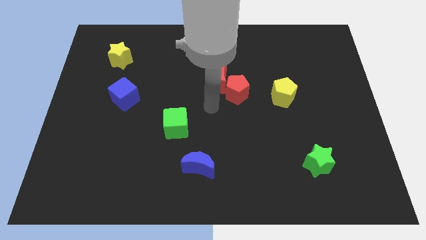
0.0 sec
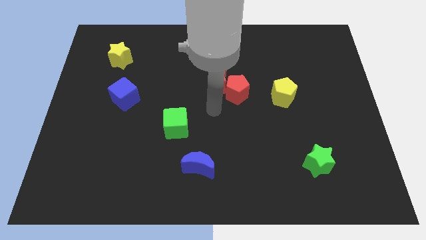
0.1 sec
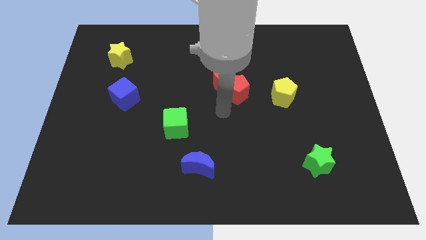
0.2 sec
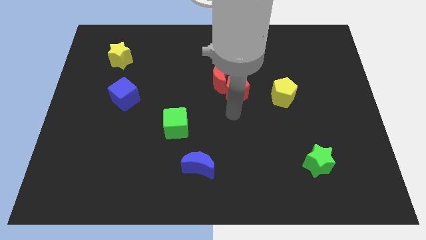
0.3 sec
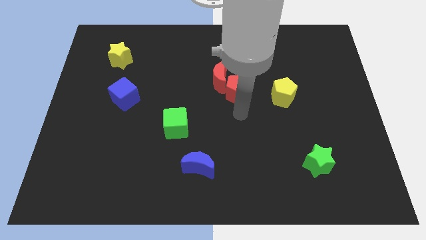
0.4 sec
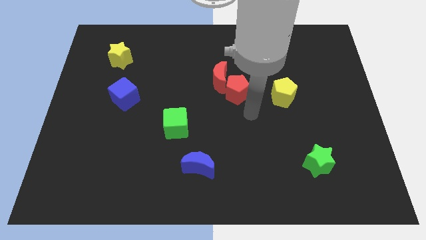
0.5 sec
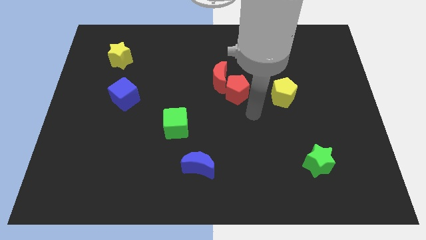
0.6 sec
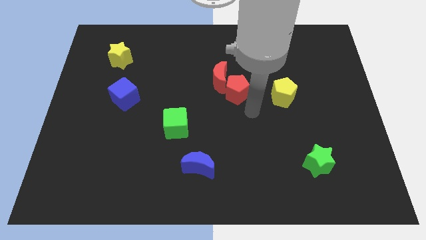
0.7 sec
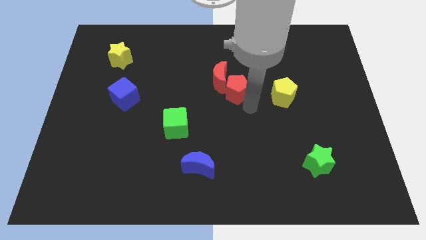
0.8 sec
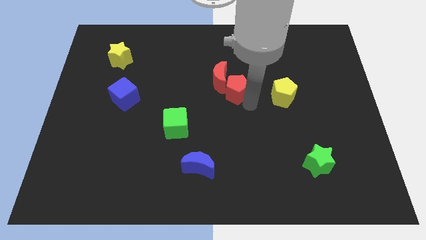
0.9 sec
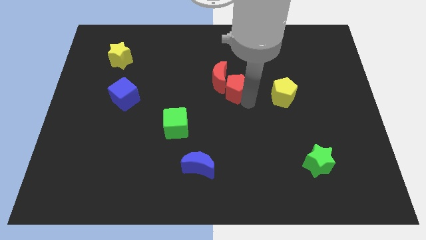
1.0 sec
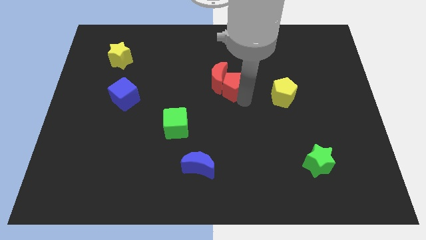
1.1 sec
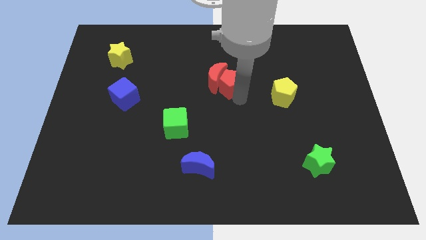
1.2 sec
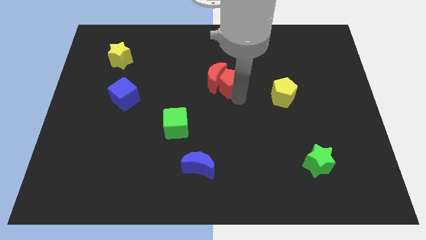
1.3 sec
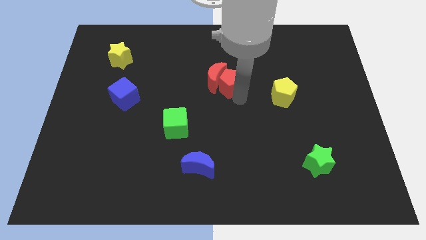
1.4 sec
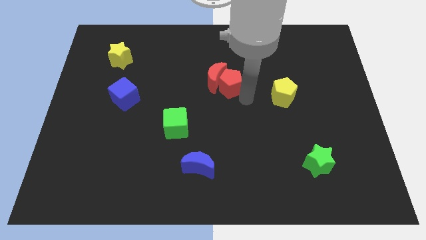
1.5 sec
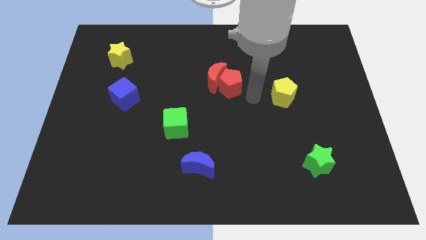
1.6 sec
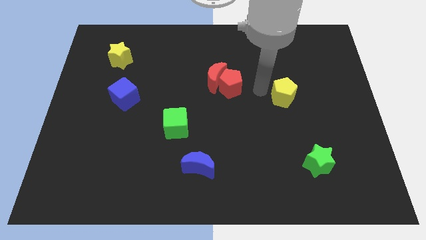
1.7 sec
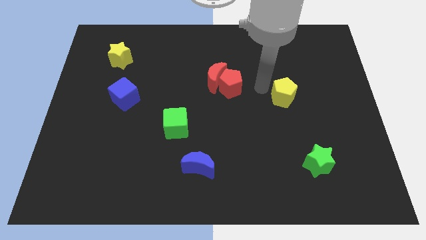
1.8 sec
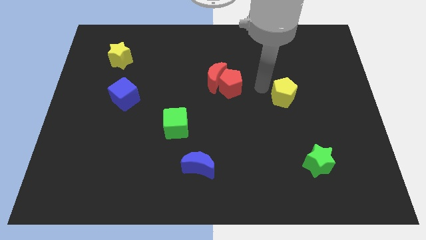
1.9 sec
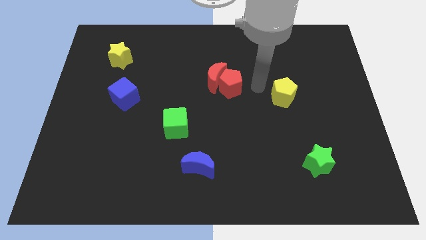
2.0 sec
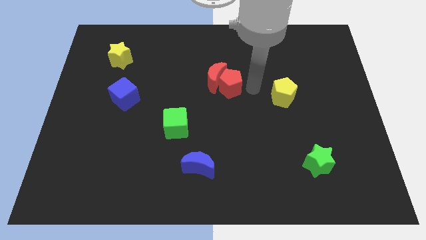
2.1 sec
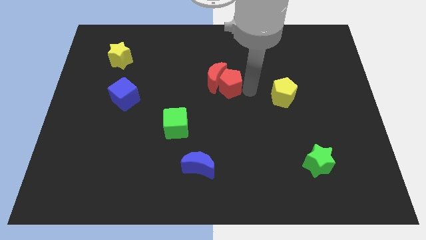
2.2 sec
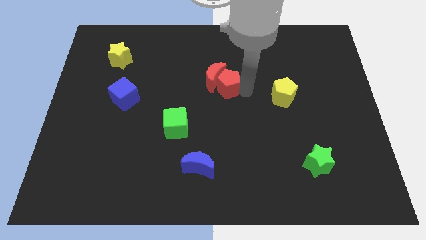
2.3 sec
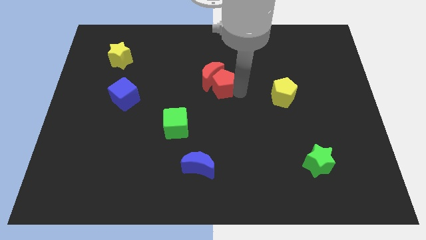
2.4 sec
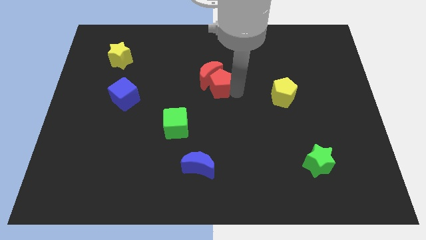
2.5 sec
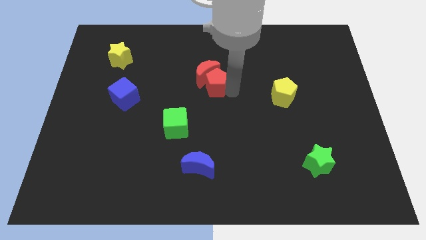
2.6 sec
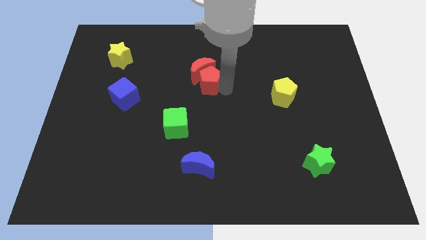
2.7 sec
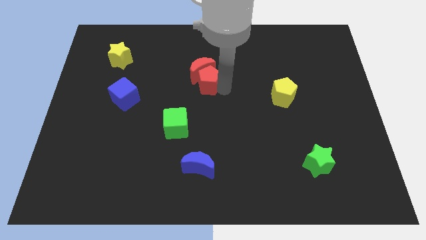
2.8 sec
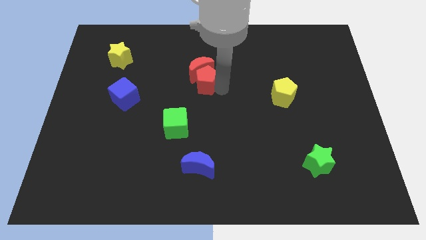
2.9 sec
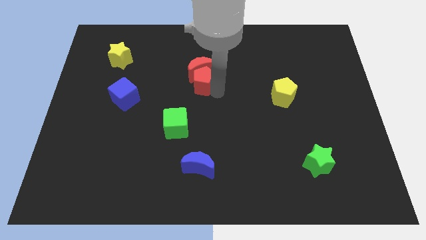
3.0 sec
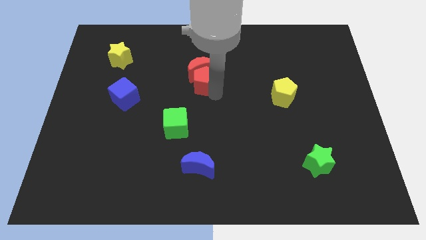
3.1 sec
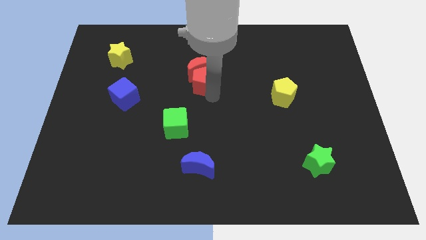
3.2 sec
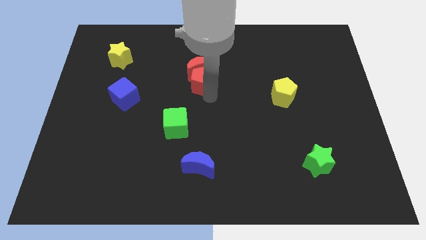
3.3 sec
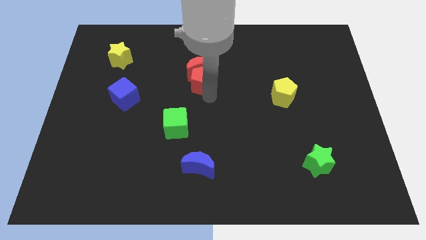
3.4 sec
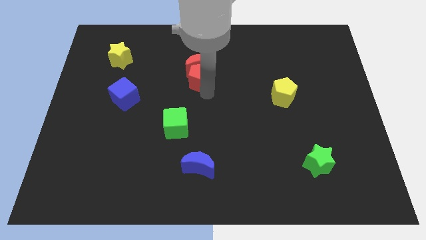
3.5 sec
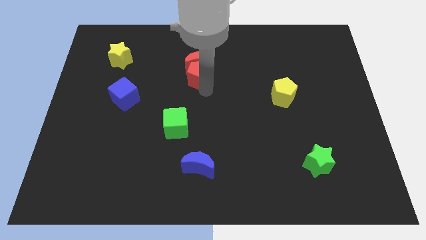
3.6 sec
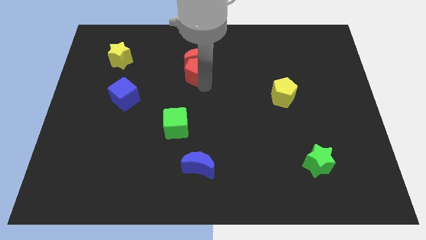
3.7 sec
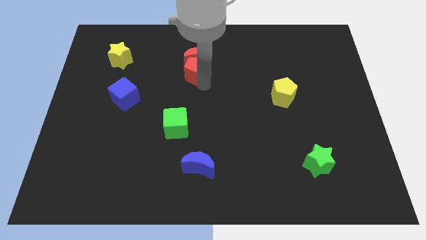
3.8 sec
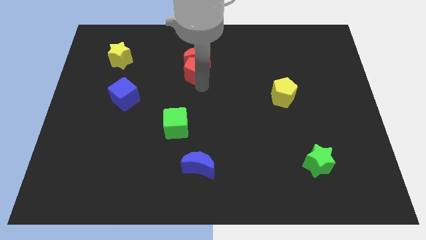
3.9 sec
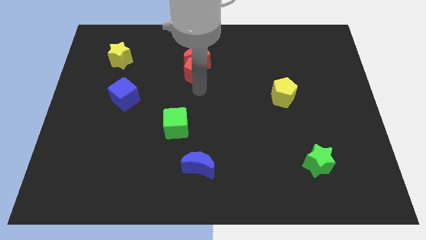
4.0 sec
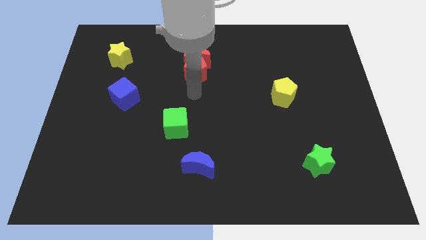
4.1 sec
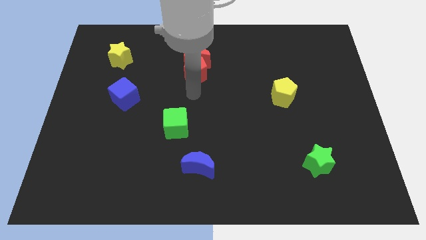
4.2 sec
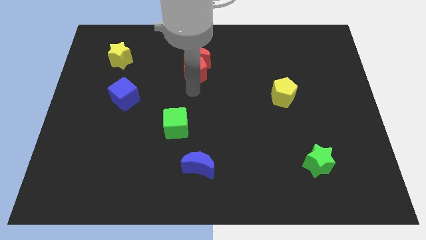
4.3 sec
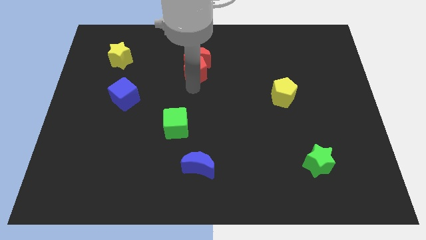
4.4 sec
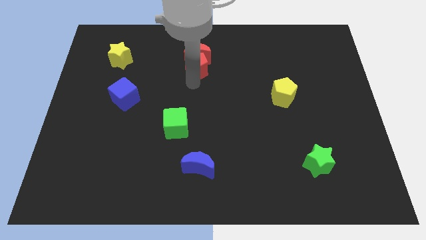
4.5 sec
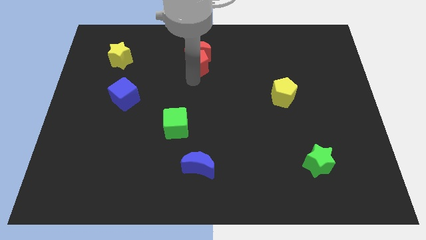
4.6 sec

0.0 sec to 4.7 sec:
push the red moon and red pentagon upward

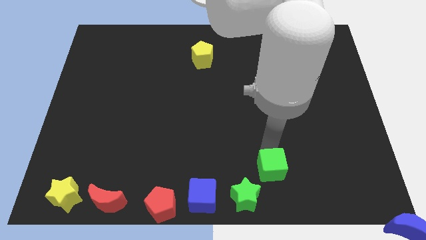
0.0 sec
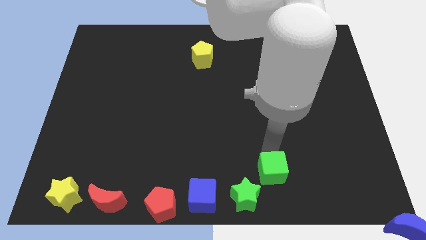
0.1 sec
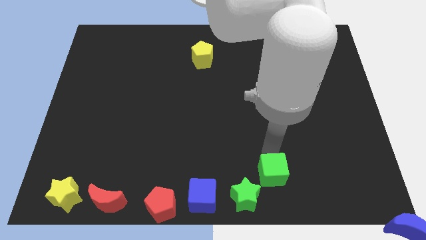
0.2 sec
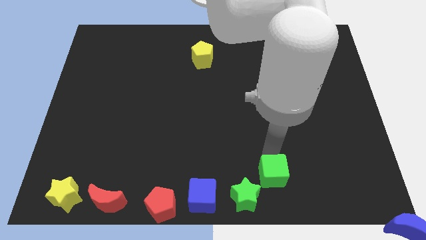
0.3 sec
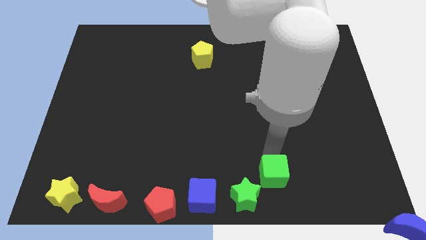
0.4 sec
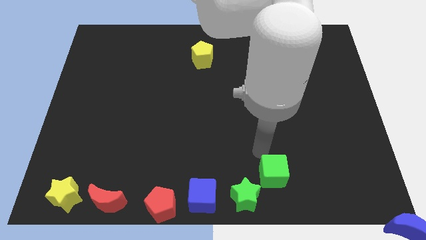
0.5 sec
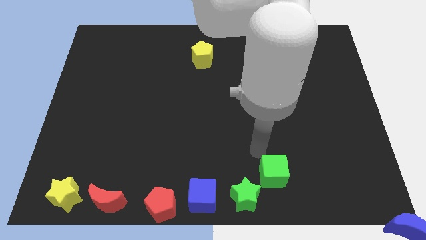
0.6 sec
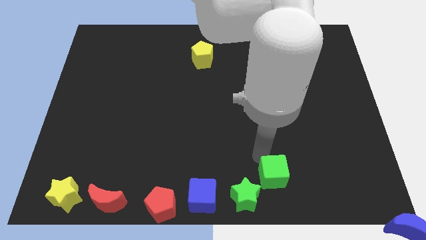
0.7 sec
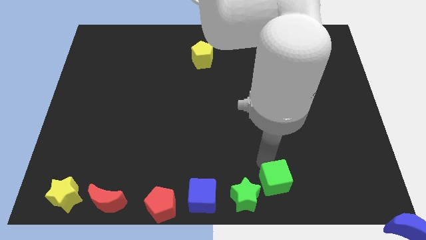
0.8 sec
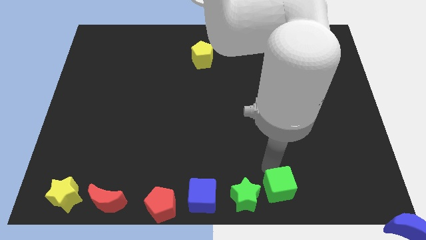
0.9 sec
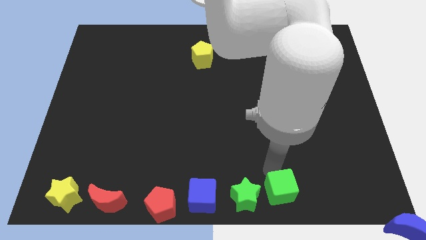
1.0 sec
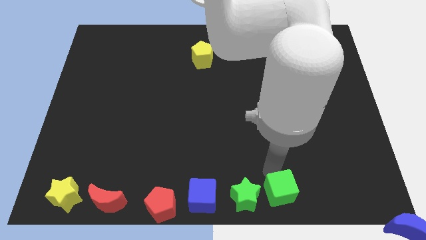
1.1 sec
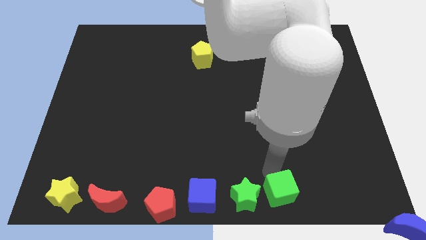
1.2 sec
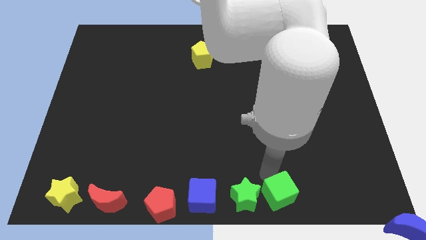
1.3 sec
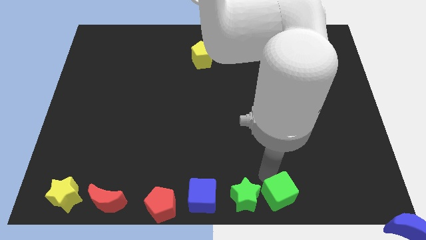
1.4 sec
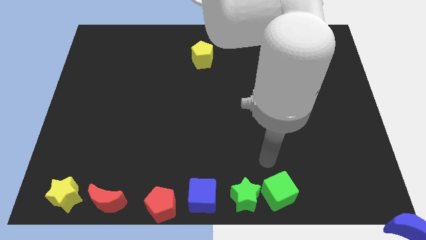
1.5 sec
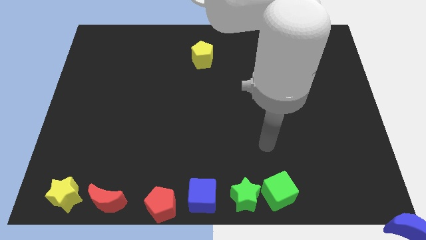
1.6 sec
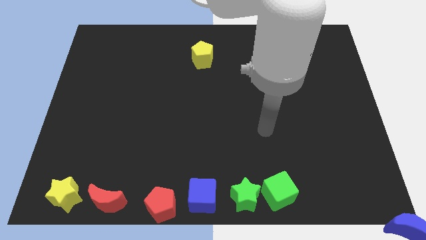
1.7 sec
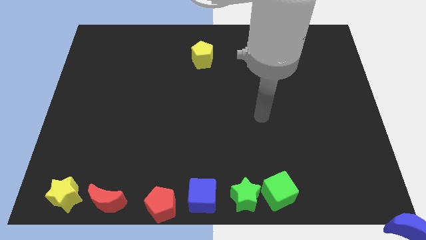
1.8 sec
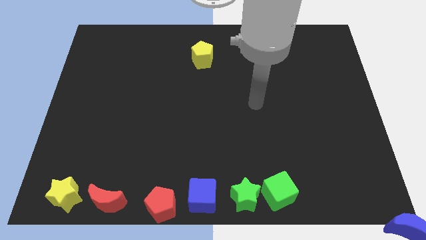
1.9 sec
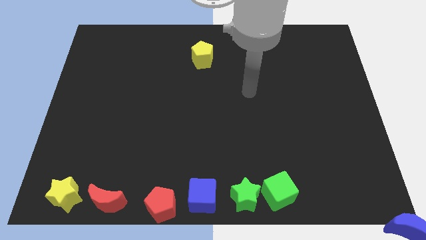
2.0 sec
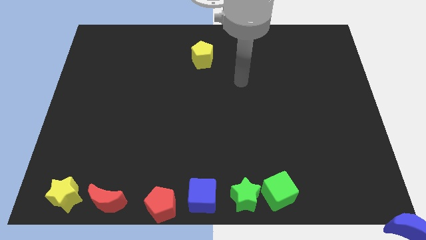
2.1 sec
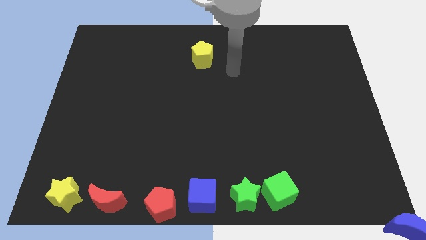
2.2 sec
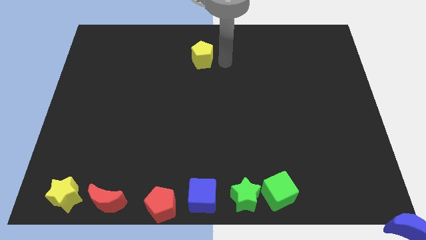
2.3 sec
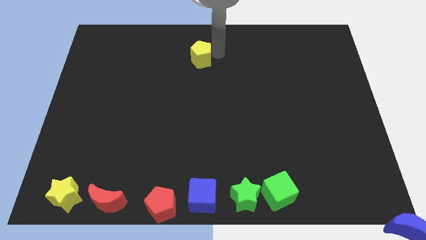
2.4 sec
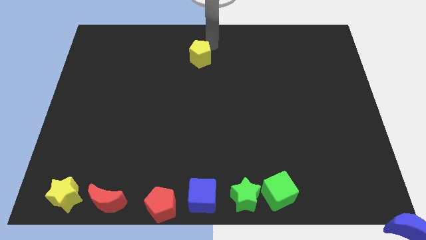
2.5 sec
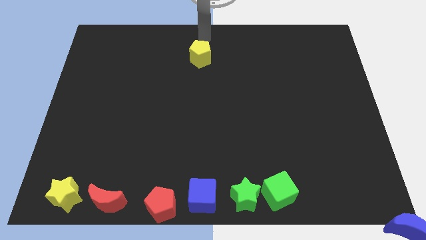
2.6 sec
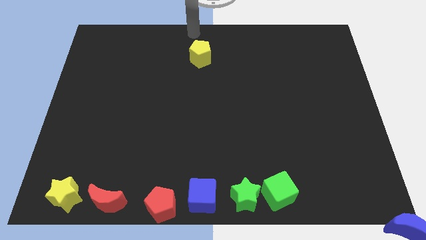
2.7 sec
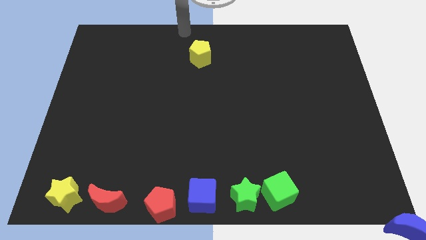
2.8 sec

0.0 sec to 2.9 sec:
move the green cube to the right of the green star

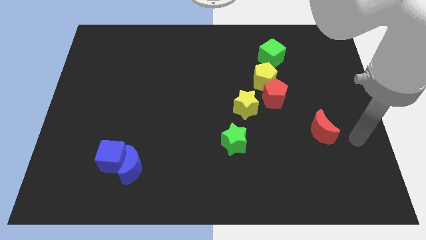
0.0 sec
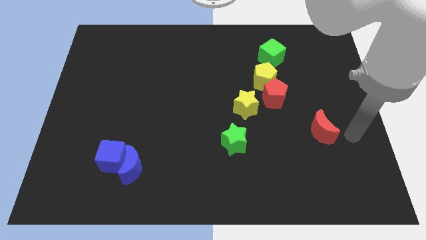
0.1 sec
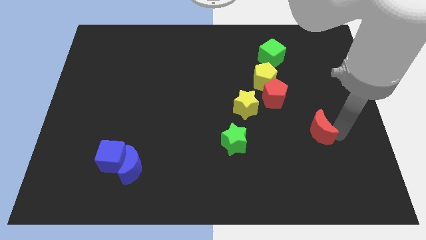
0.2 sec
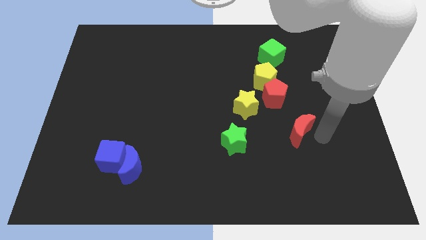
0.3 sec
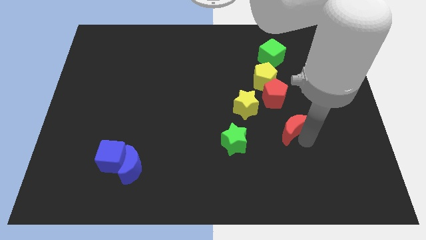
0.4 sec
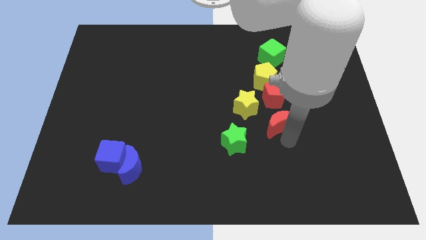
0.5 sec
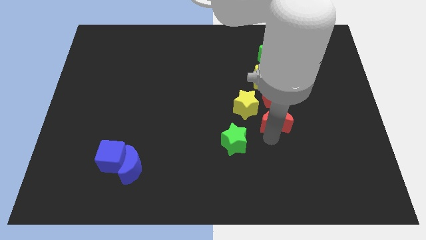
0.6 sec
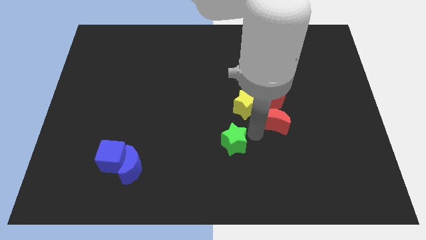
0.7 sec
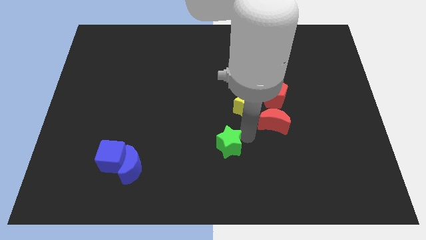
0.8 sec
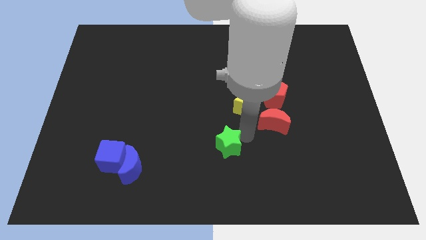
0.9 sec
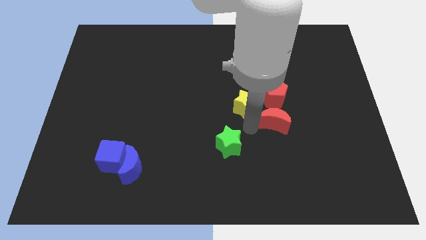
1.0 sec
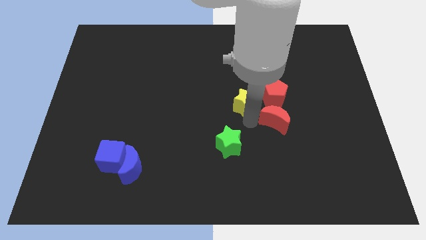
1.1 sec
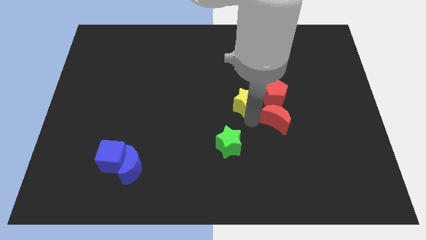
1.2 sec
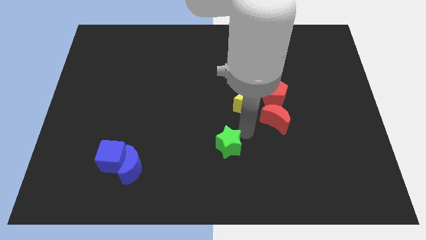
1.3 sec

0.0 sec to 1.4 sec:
push the red moon at the bottom of the red pentagon
